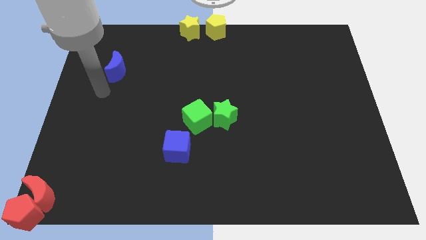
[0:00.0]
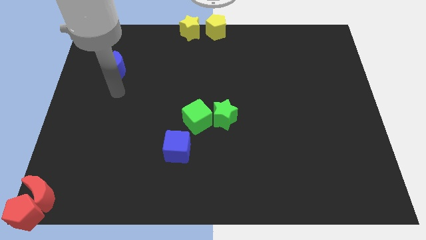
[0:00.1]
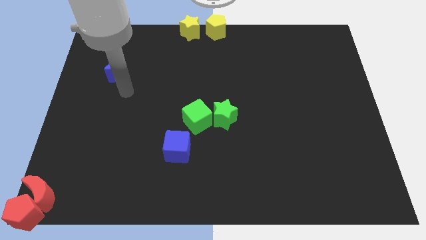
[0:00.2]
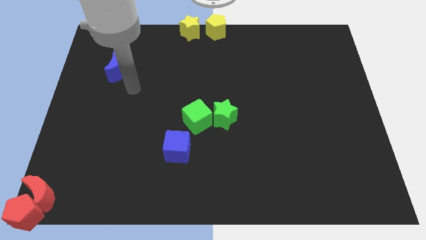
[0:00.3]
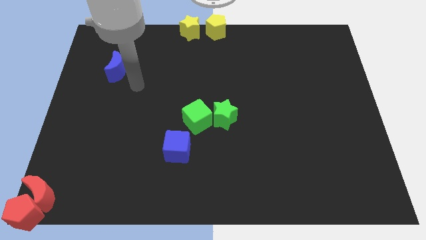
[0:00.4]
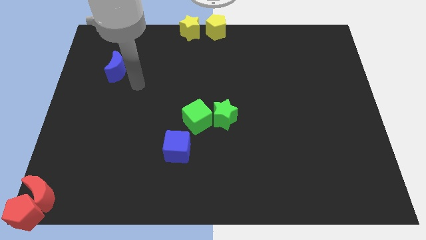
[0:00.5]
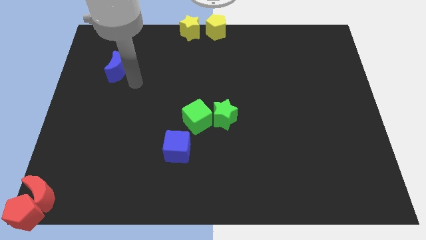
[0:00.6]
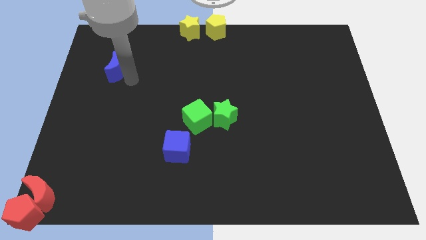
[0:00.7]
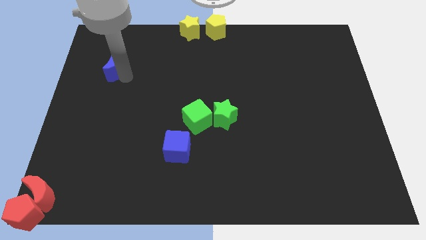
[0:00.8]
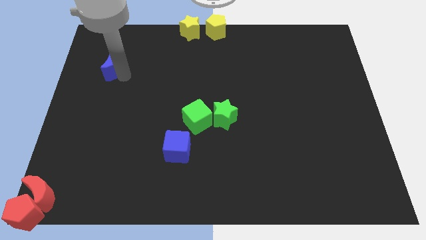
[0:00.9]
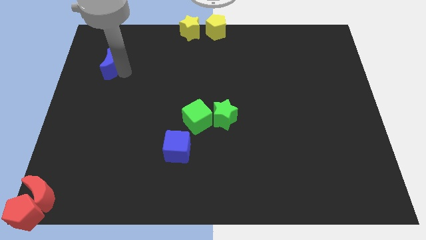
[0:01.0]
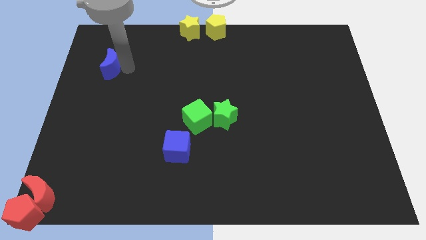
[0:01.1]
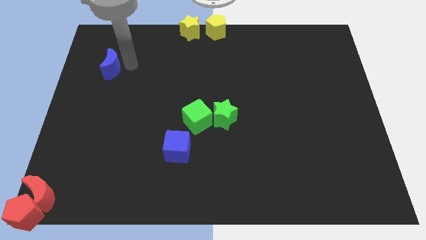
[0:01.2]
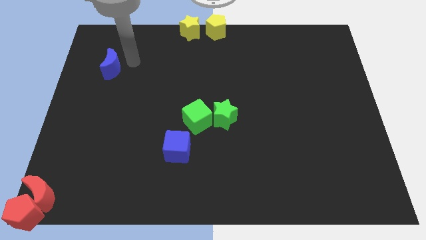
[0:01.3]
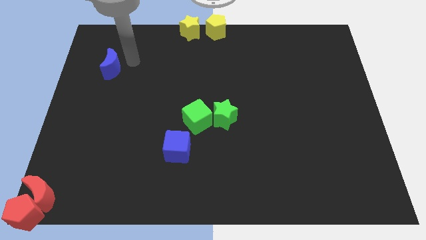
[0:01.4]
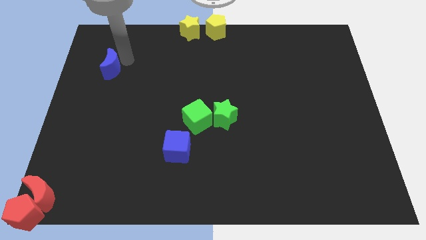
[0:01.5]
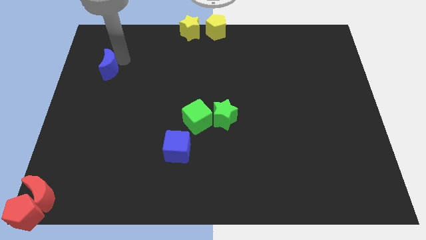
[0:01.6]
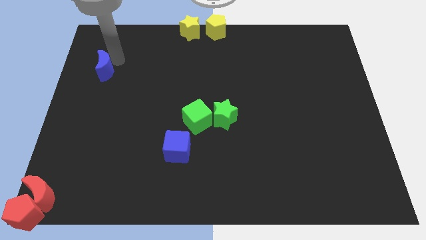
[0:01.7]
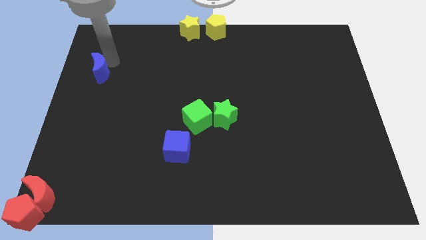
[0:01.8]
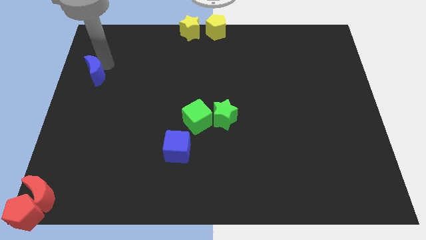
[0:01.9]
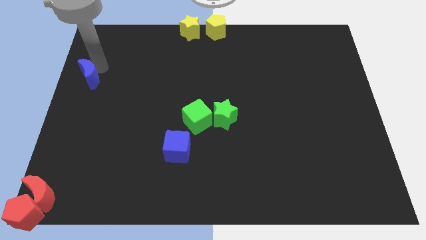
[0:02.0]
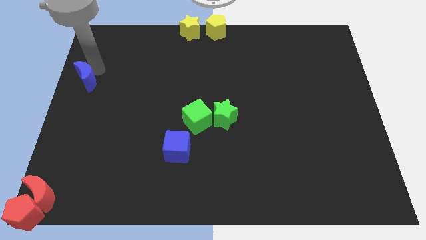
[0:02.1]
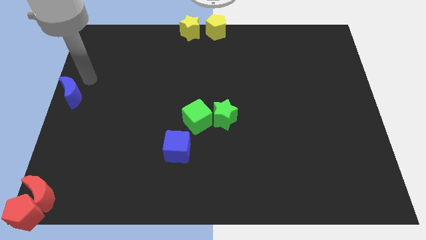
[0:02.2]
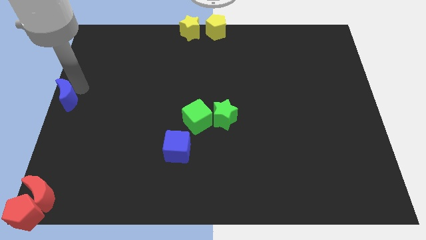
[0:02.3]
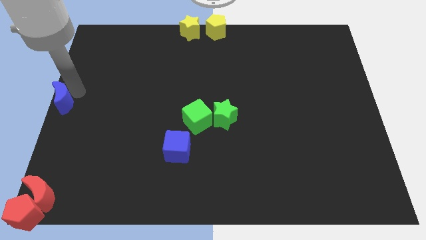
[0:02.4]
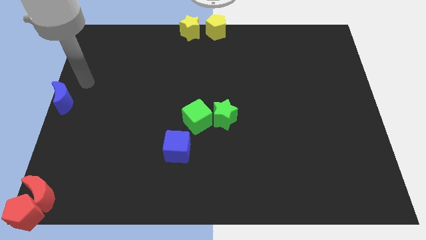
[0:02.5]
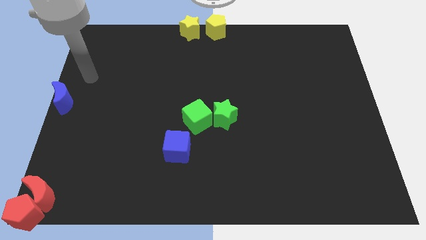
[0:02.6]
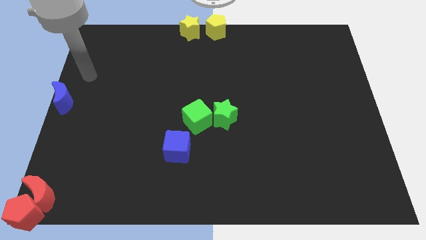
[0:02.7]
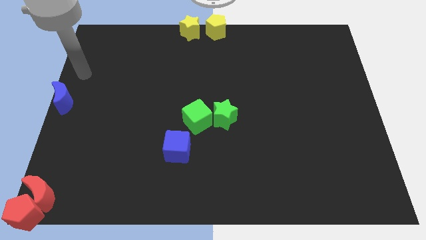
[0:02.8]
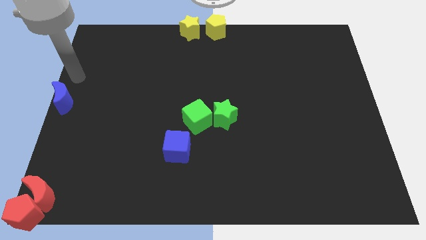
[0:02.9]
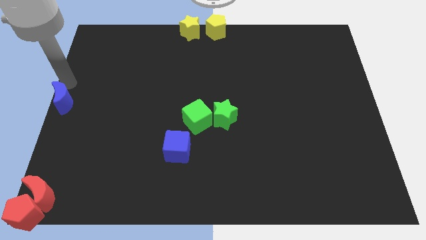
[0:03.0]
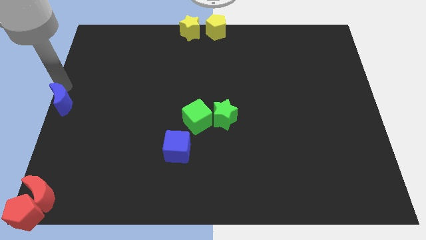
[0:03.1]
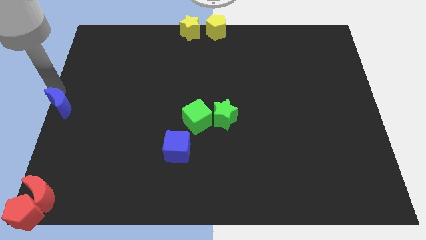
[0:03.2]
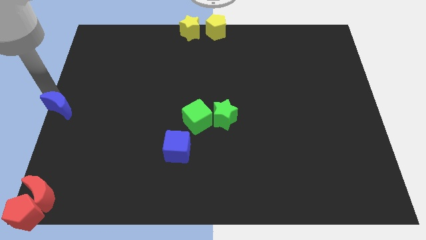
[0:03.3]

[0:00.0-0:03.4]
put the blue moon at the center right side of the board

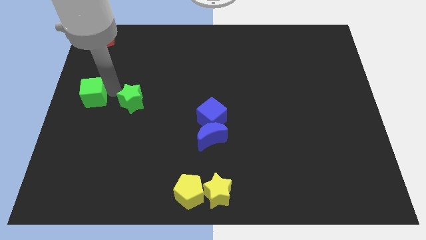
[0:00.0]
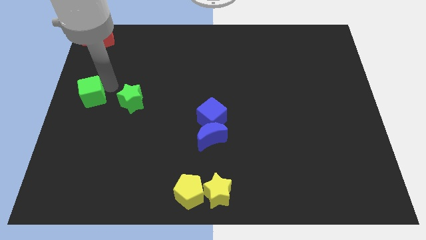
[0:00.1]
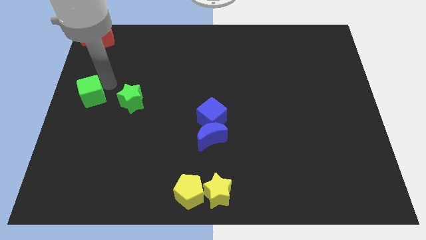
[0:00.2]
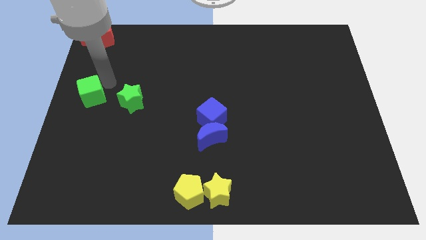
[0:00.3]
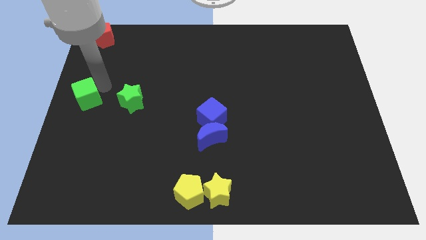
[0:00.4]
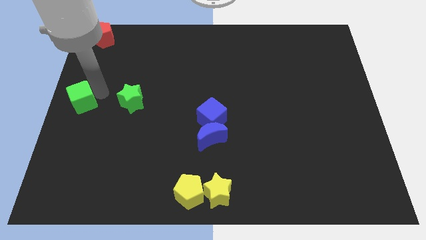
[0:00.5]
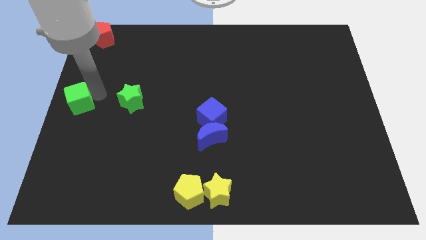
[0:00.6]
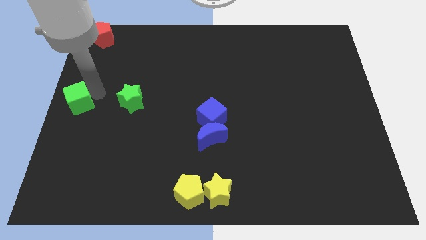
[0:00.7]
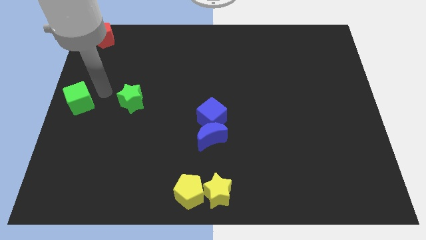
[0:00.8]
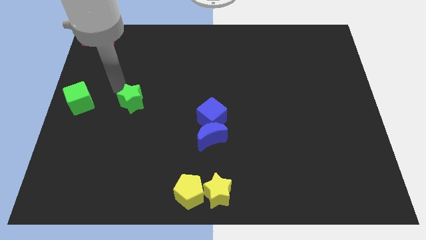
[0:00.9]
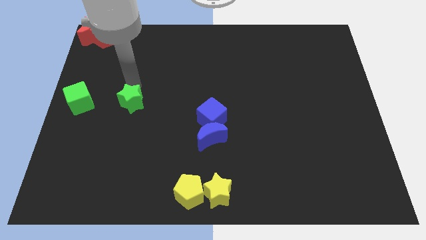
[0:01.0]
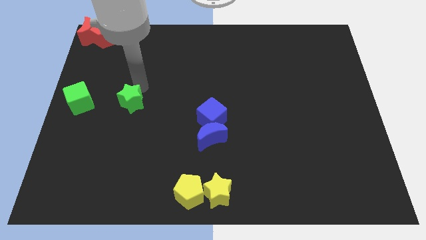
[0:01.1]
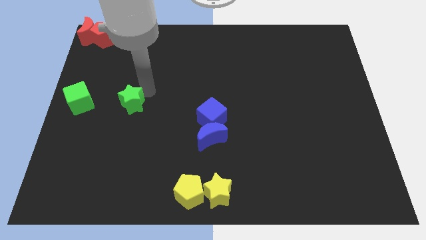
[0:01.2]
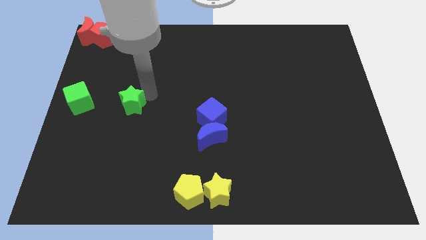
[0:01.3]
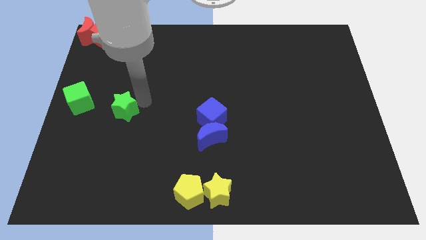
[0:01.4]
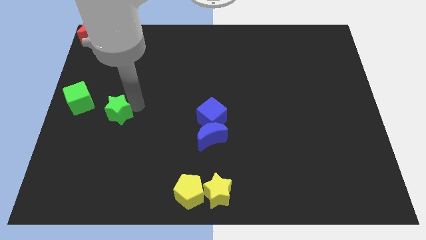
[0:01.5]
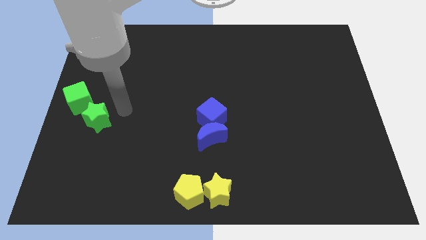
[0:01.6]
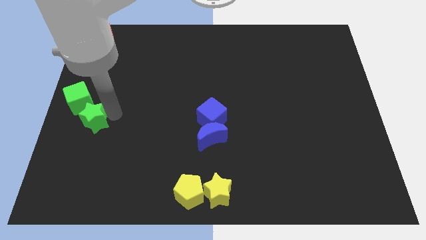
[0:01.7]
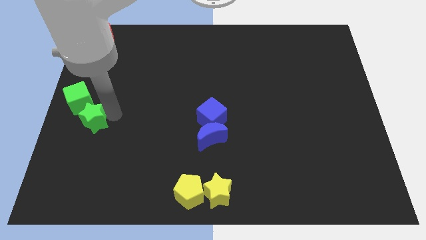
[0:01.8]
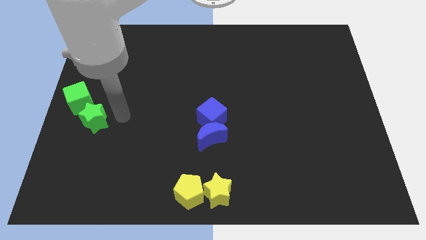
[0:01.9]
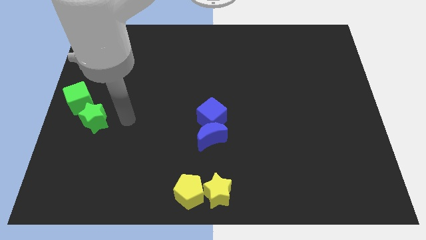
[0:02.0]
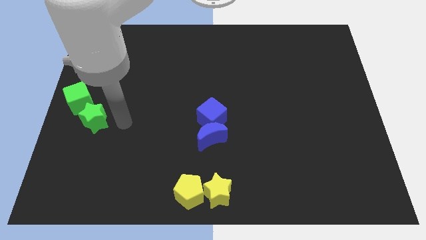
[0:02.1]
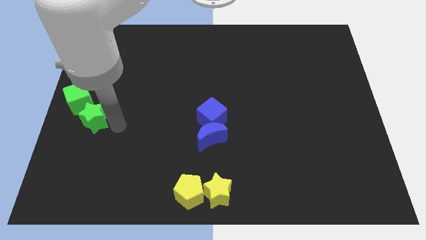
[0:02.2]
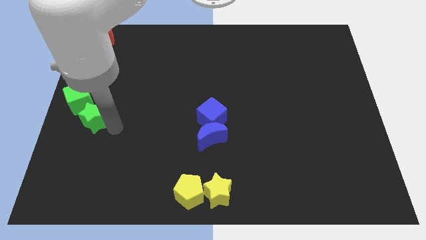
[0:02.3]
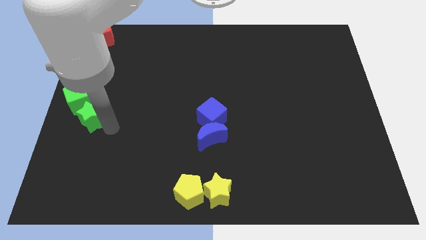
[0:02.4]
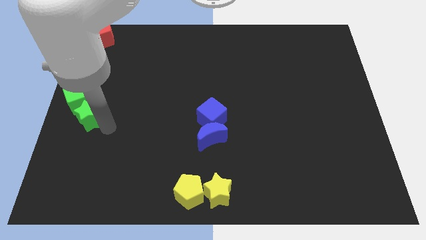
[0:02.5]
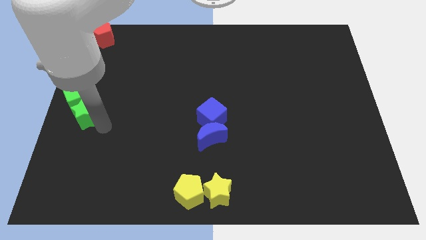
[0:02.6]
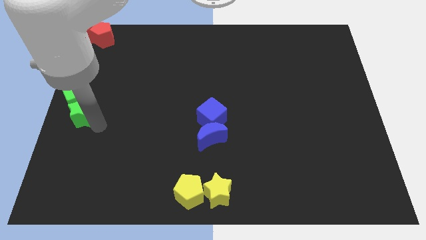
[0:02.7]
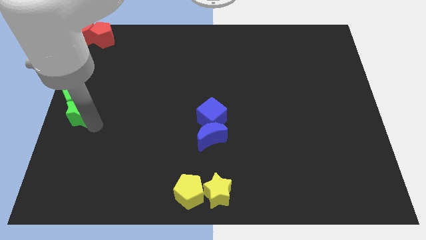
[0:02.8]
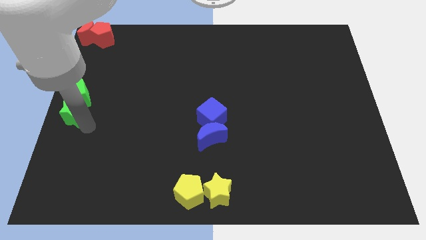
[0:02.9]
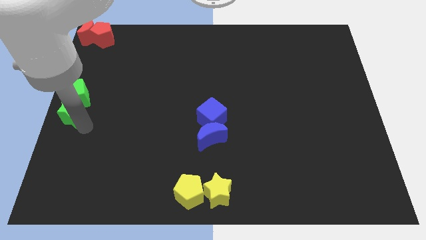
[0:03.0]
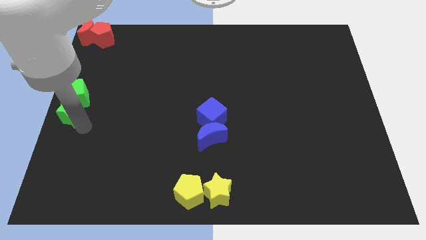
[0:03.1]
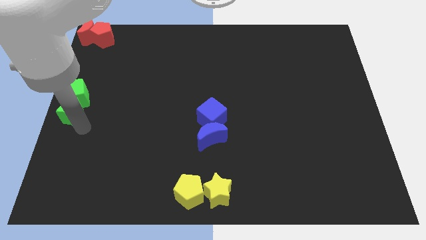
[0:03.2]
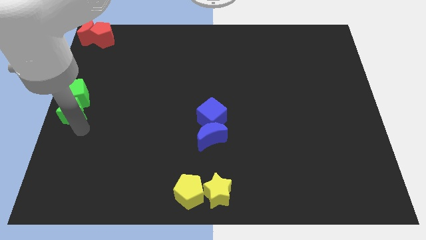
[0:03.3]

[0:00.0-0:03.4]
push green star below to the green cube

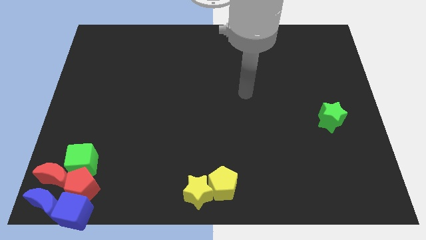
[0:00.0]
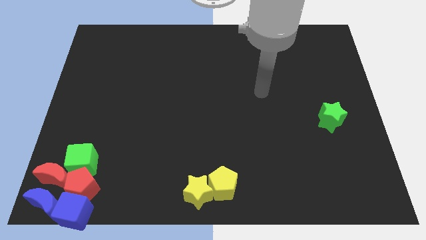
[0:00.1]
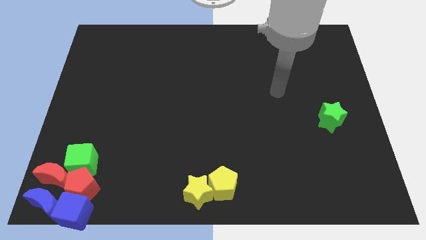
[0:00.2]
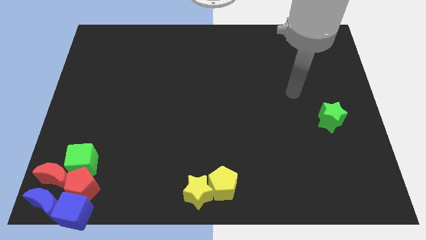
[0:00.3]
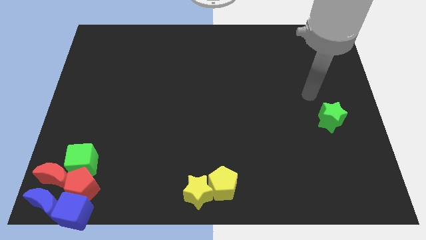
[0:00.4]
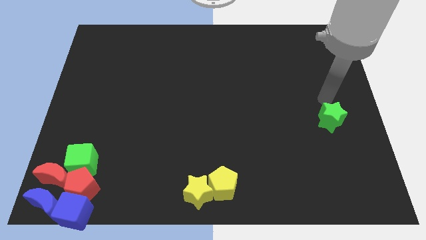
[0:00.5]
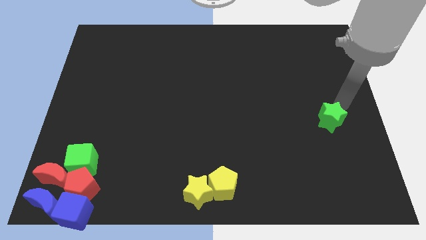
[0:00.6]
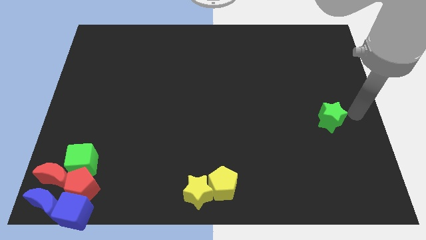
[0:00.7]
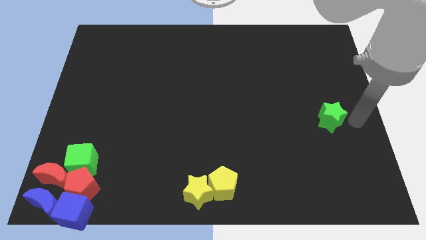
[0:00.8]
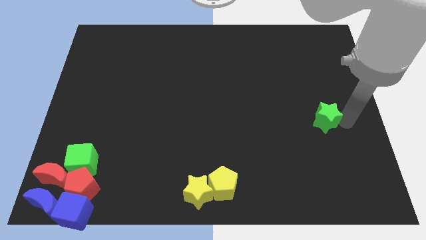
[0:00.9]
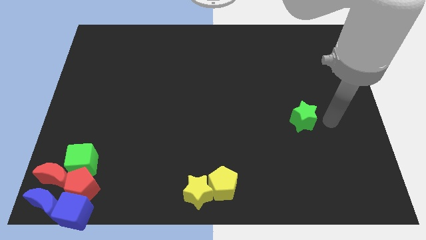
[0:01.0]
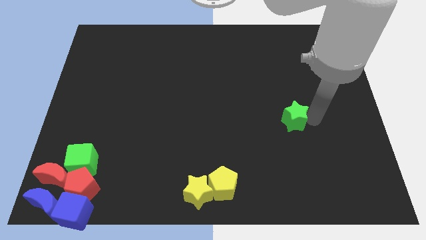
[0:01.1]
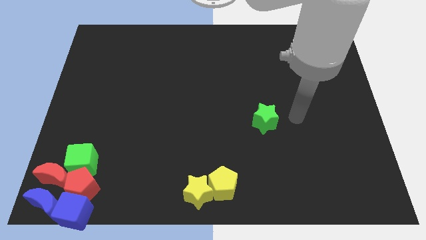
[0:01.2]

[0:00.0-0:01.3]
push the green star towards center

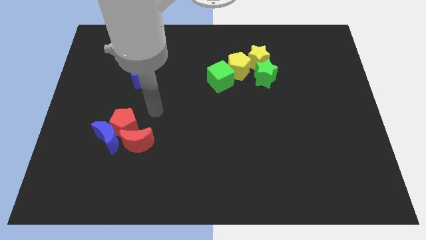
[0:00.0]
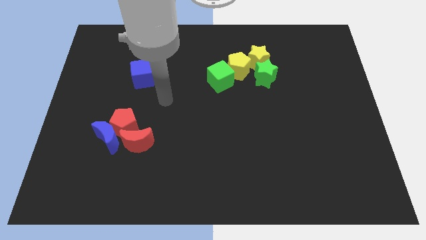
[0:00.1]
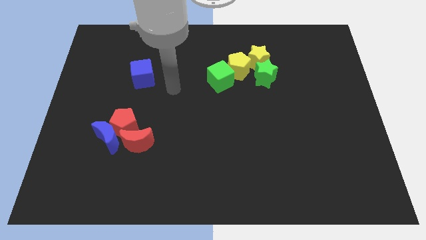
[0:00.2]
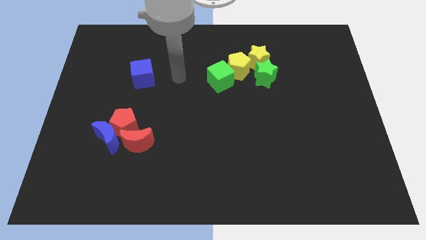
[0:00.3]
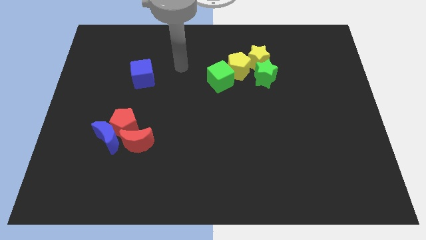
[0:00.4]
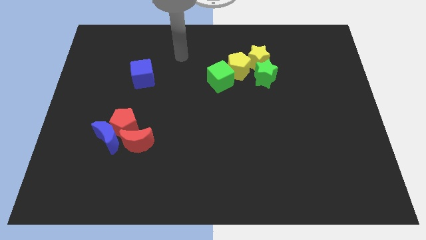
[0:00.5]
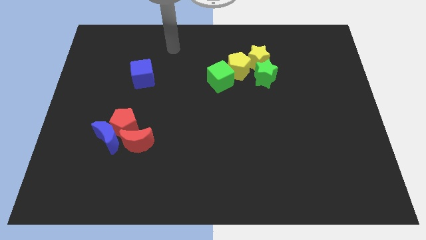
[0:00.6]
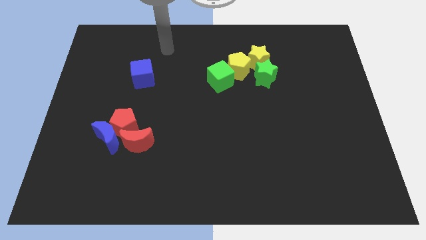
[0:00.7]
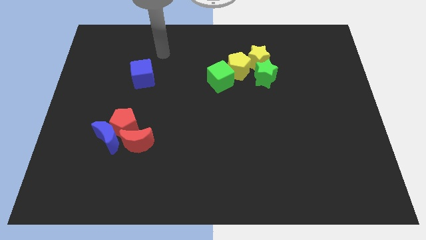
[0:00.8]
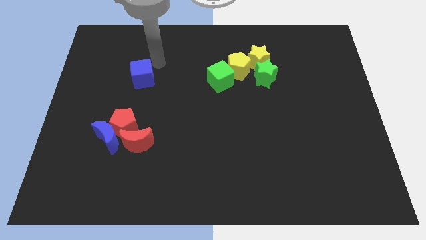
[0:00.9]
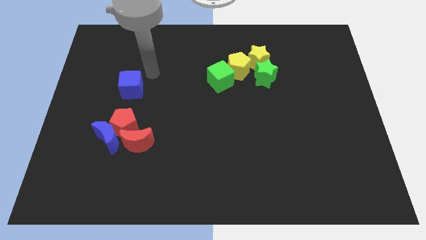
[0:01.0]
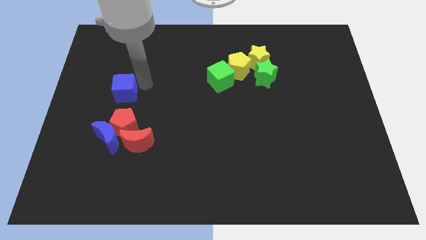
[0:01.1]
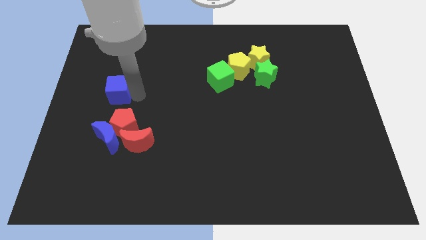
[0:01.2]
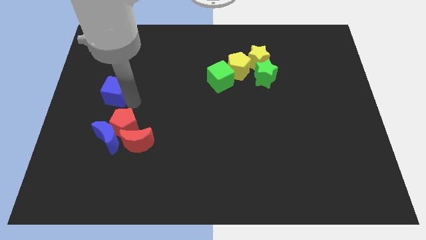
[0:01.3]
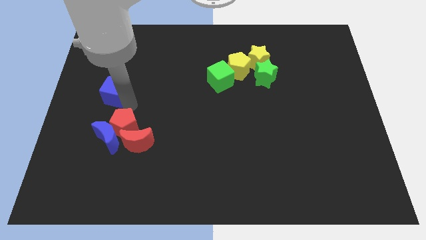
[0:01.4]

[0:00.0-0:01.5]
move the blue cube towards the grooup of blocks
